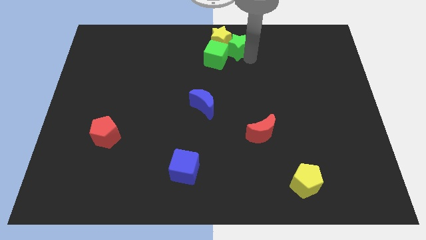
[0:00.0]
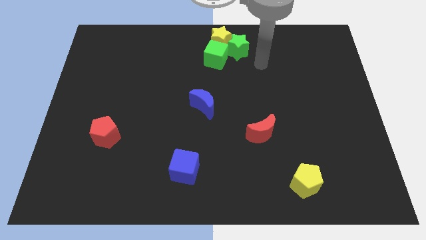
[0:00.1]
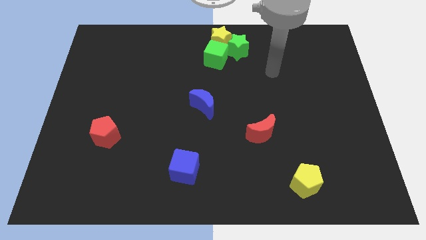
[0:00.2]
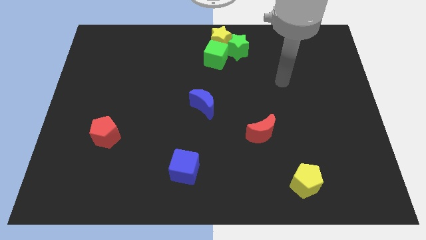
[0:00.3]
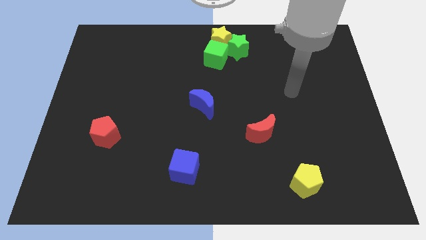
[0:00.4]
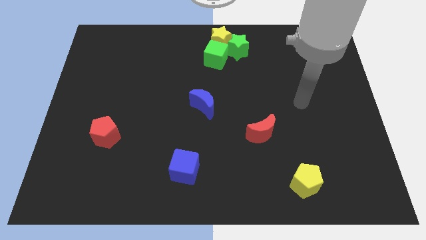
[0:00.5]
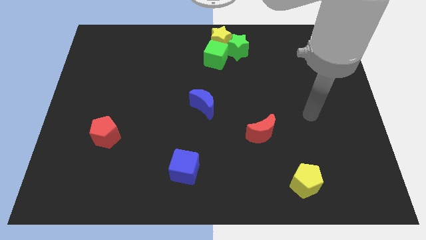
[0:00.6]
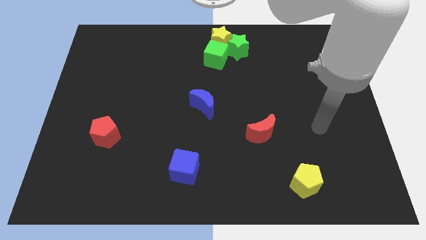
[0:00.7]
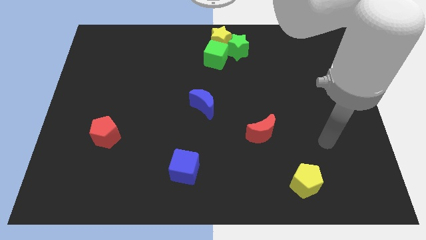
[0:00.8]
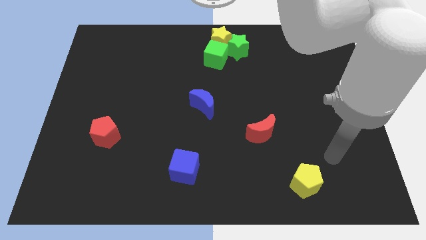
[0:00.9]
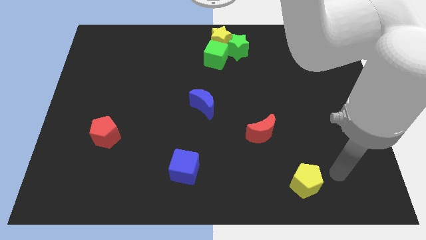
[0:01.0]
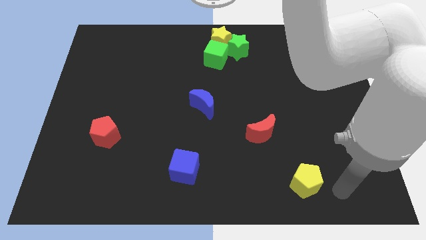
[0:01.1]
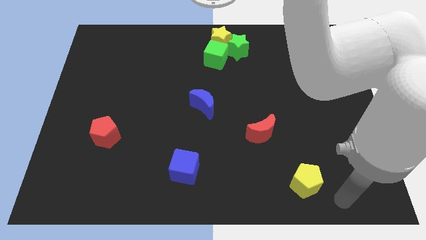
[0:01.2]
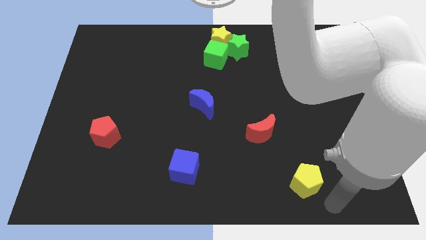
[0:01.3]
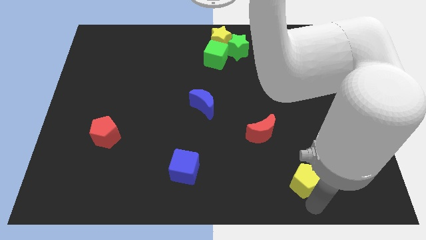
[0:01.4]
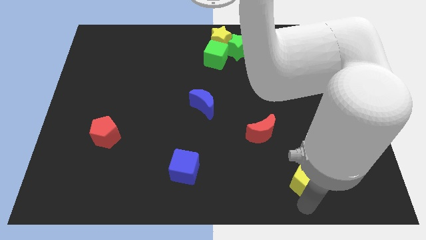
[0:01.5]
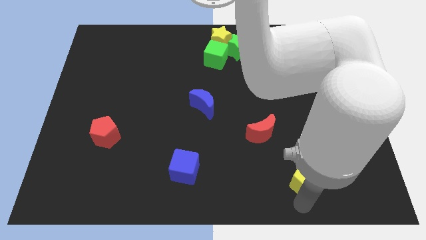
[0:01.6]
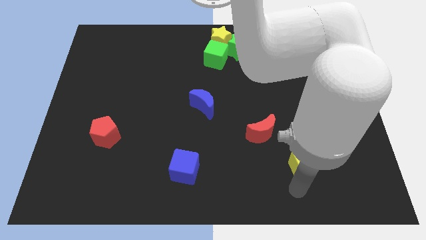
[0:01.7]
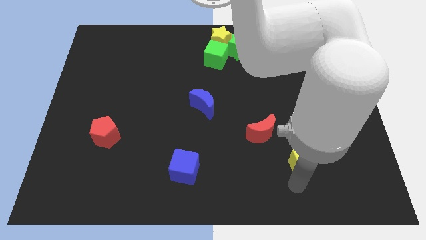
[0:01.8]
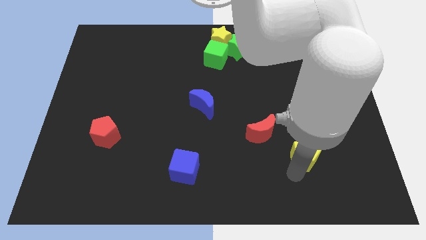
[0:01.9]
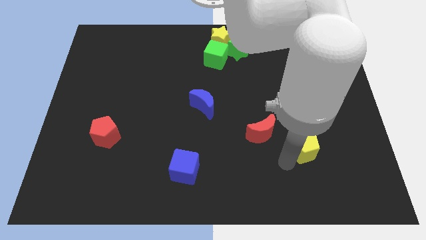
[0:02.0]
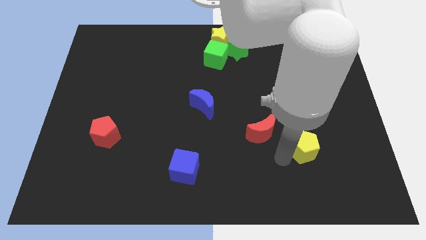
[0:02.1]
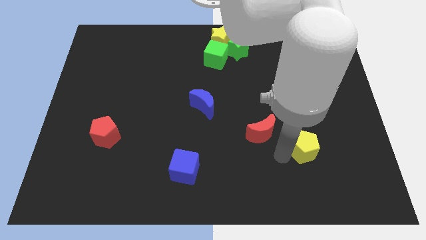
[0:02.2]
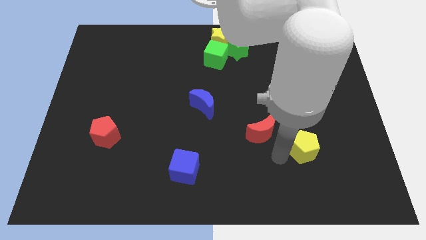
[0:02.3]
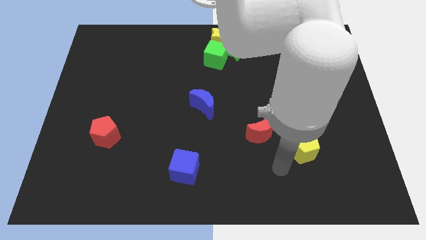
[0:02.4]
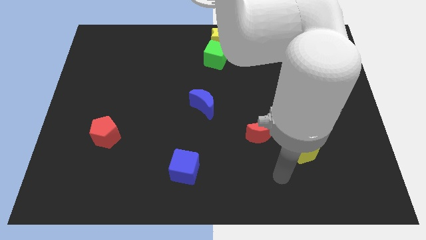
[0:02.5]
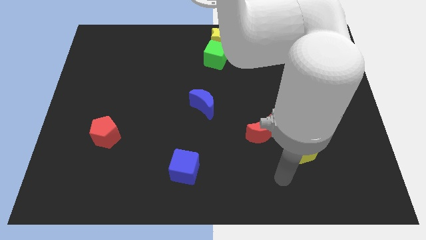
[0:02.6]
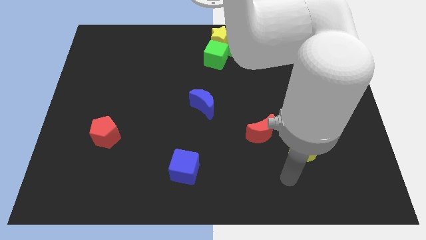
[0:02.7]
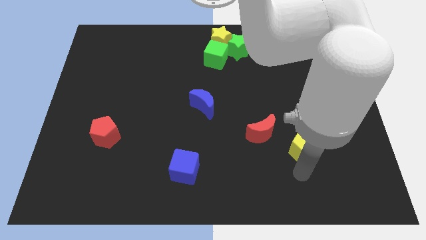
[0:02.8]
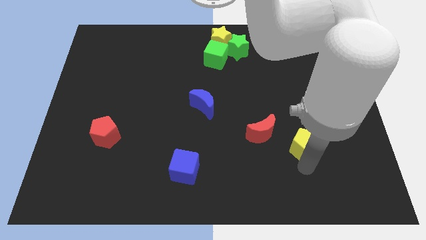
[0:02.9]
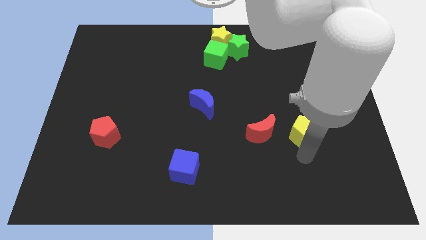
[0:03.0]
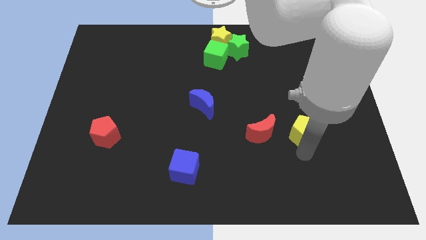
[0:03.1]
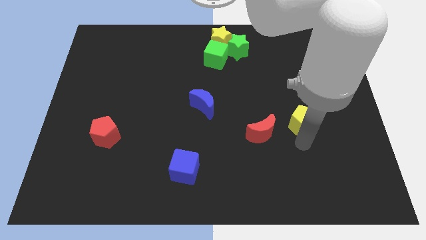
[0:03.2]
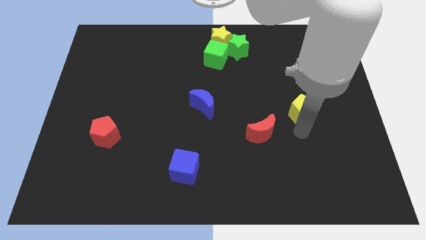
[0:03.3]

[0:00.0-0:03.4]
push the yellow pentagon parallel to red crescent

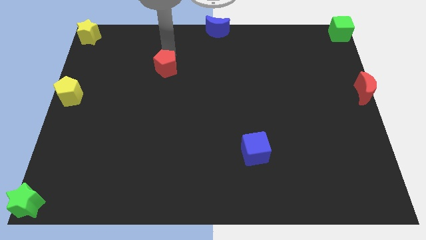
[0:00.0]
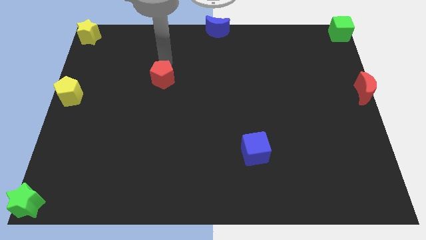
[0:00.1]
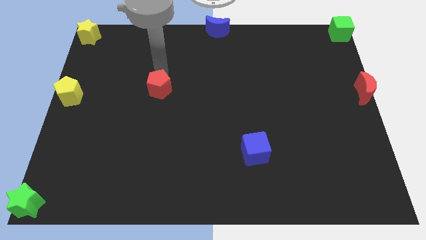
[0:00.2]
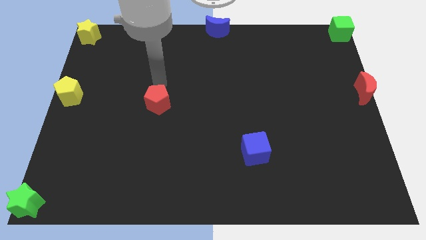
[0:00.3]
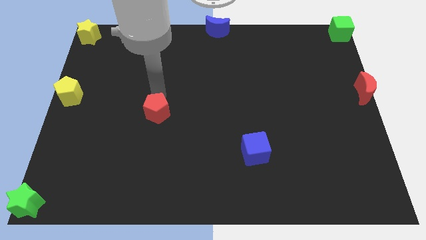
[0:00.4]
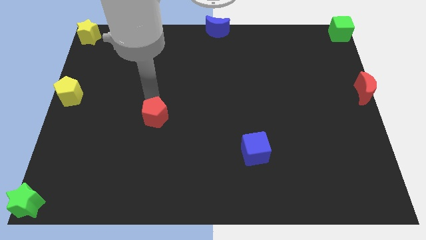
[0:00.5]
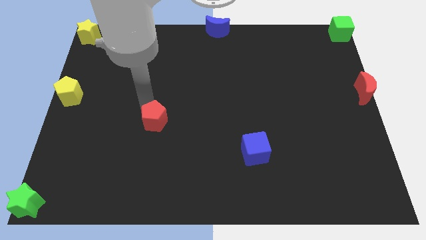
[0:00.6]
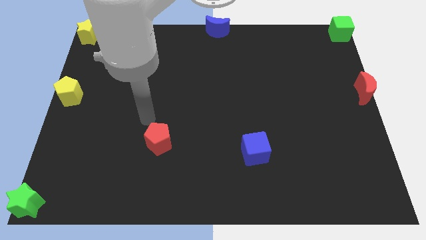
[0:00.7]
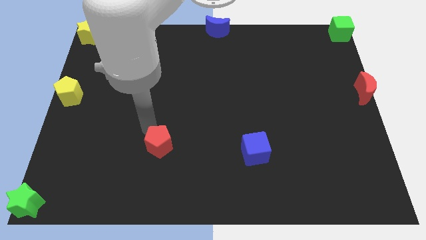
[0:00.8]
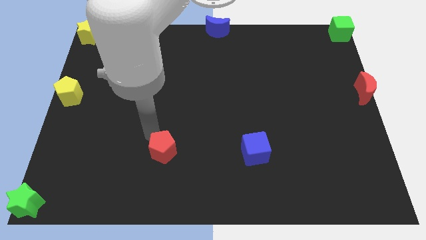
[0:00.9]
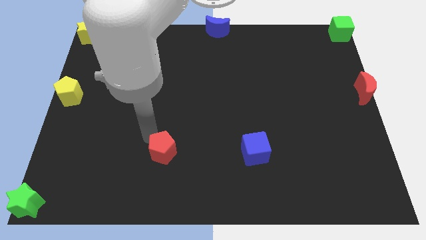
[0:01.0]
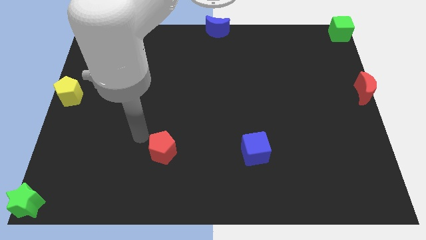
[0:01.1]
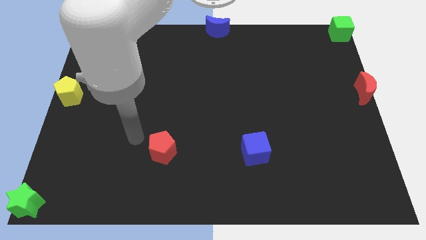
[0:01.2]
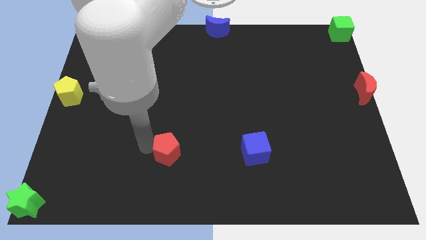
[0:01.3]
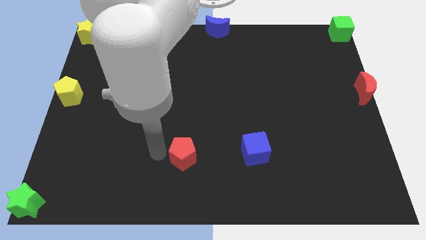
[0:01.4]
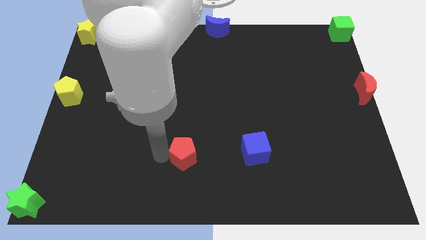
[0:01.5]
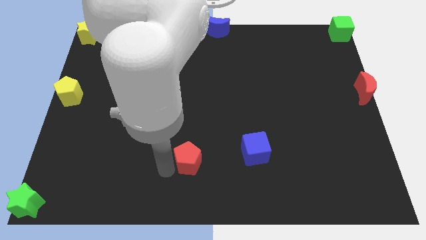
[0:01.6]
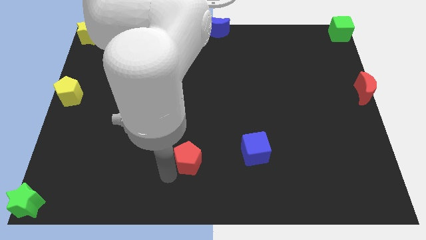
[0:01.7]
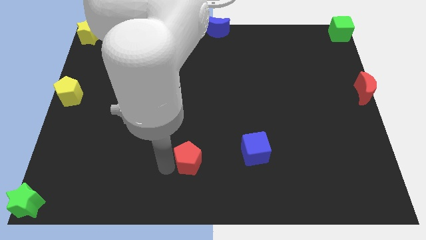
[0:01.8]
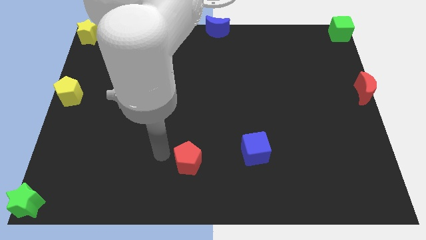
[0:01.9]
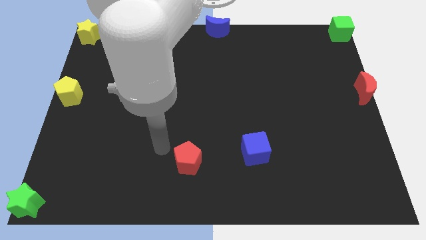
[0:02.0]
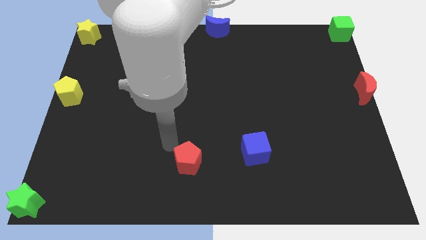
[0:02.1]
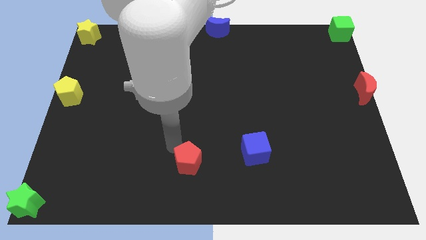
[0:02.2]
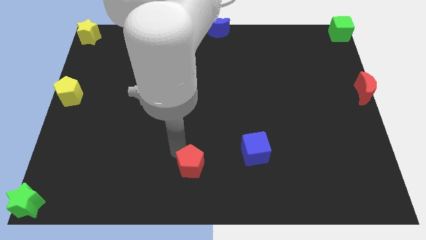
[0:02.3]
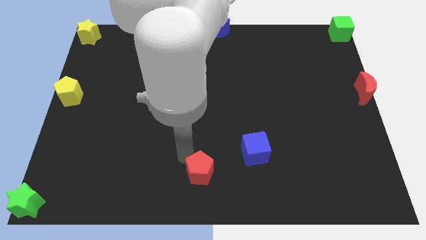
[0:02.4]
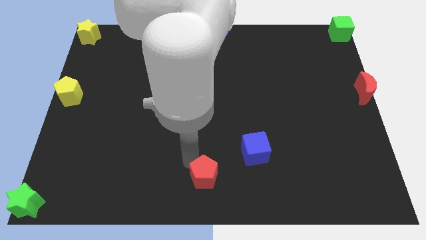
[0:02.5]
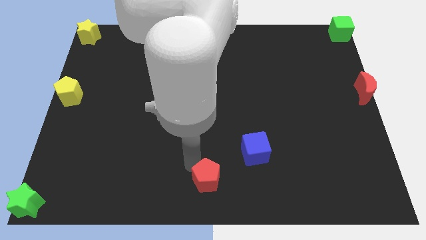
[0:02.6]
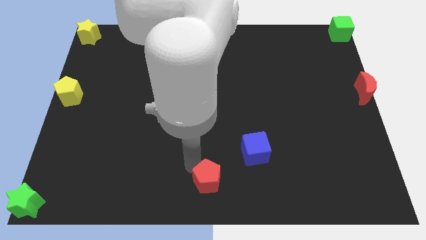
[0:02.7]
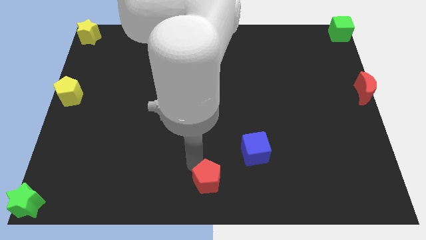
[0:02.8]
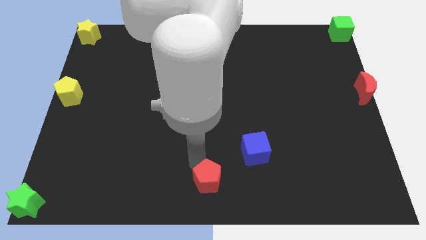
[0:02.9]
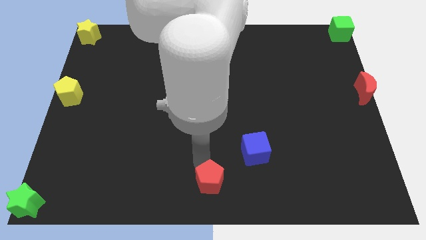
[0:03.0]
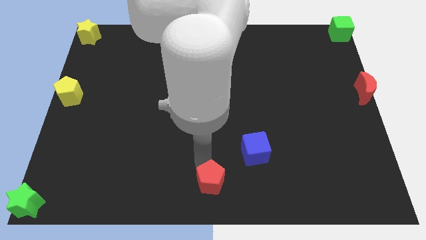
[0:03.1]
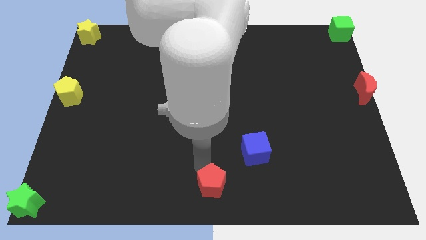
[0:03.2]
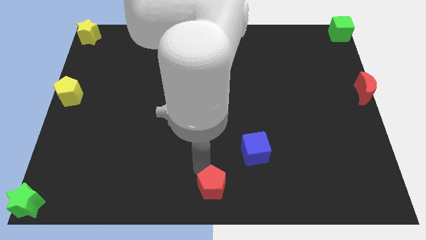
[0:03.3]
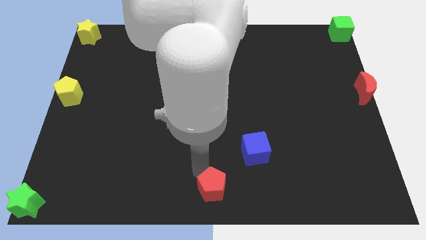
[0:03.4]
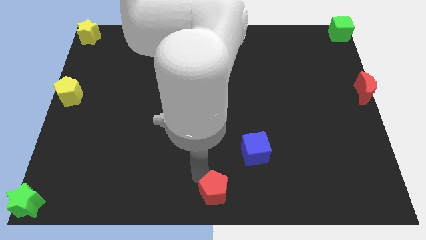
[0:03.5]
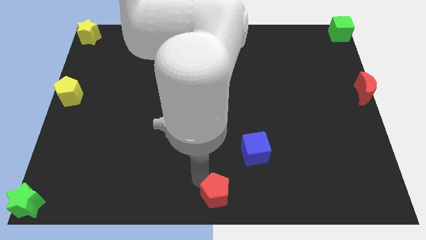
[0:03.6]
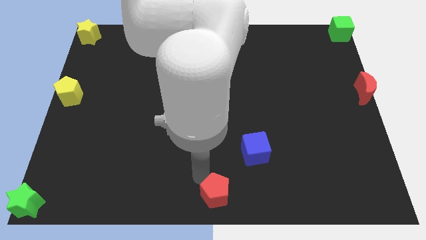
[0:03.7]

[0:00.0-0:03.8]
move the red pentagon to the bottom middle

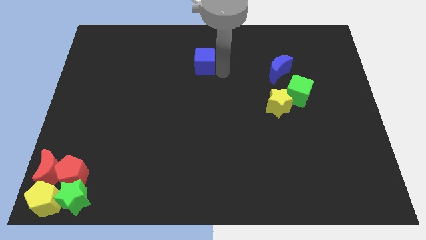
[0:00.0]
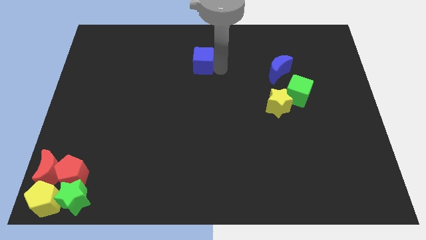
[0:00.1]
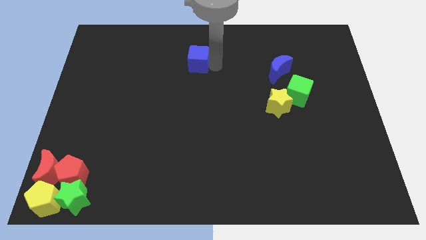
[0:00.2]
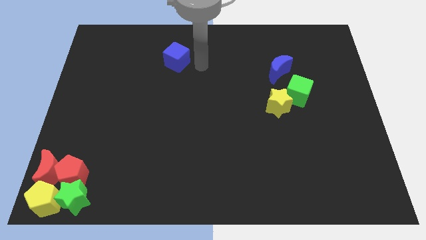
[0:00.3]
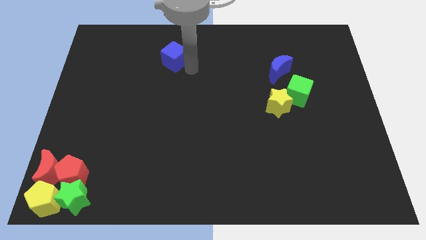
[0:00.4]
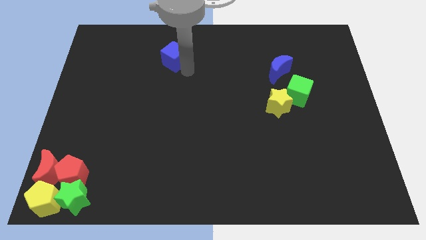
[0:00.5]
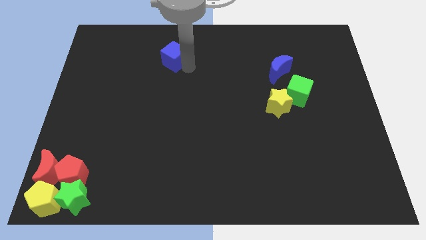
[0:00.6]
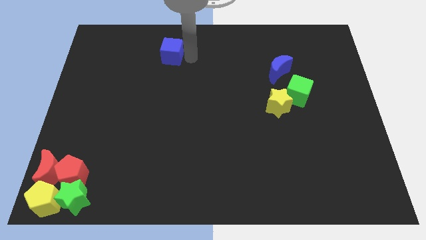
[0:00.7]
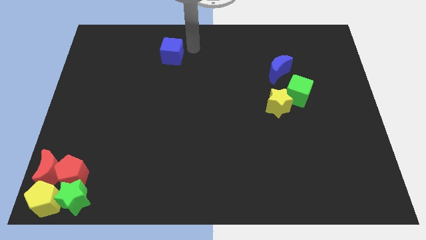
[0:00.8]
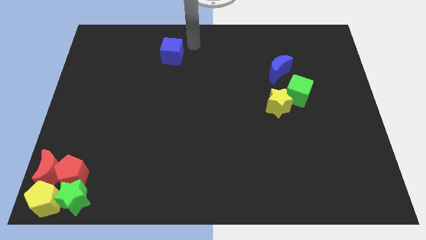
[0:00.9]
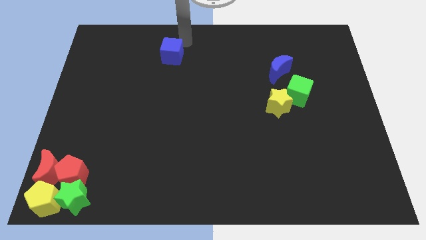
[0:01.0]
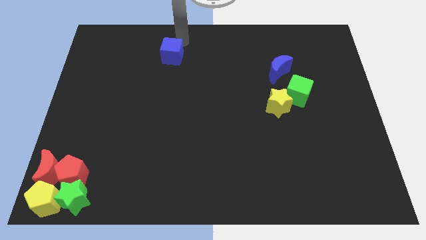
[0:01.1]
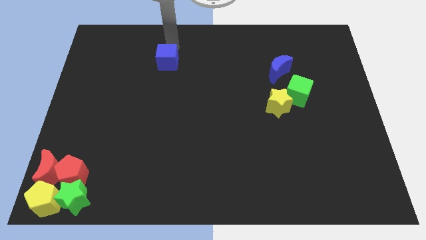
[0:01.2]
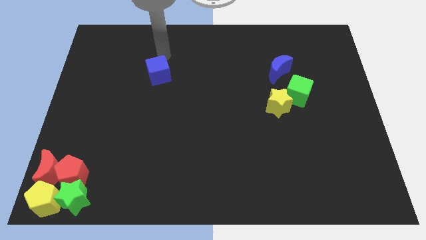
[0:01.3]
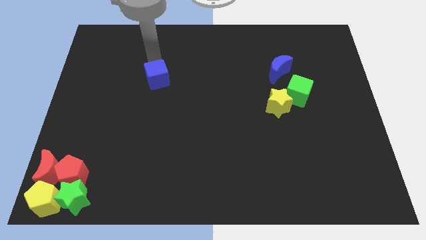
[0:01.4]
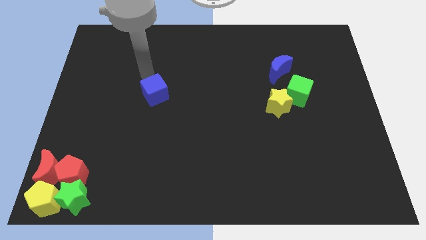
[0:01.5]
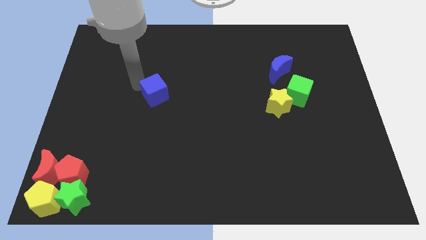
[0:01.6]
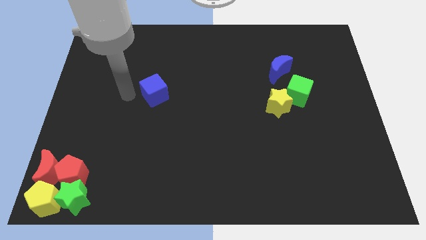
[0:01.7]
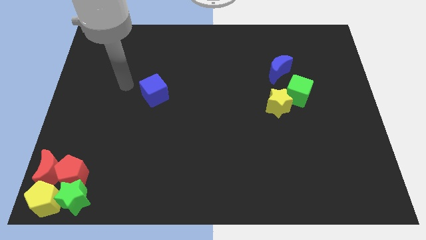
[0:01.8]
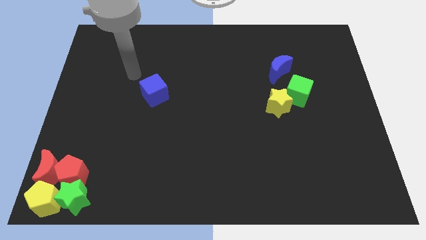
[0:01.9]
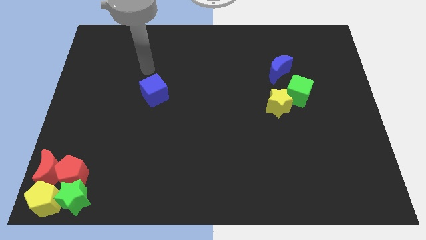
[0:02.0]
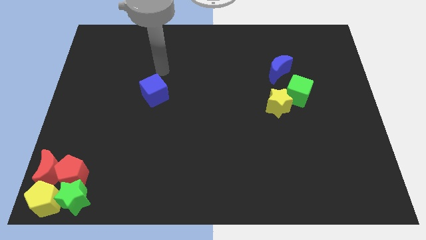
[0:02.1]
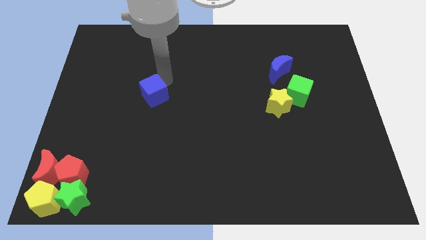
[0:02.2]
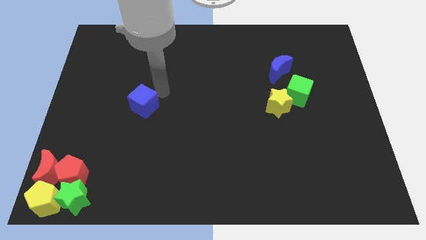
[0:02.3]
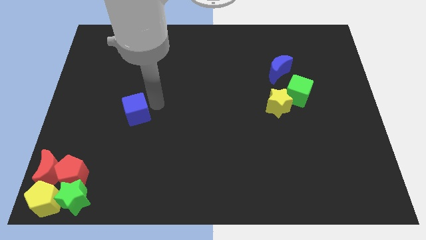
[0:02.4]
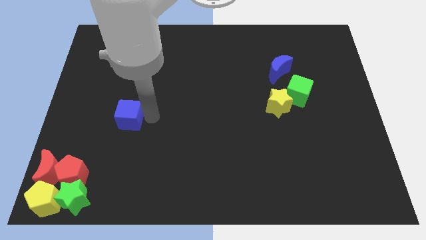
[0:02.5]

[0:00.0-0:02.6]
move the blue cube towards the left center of the board
